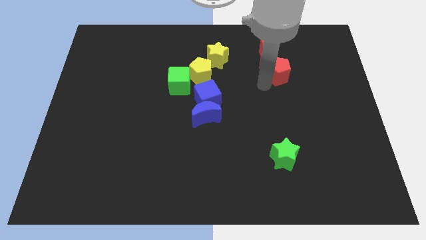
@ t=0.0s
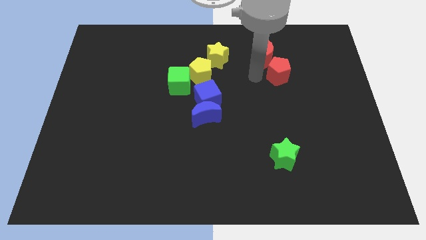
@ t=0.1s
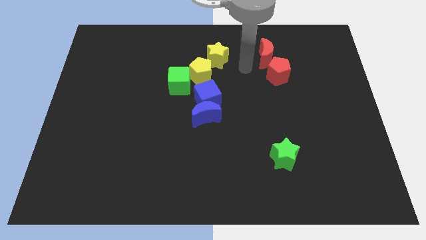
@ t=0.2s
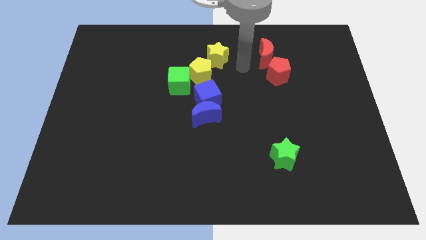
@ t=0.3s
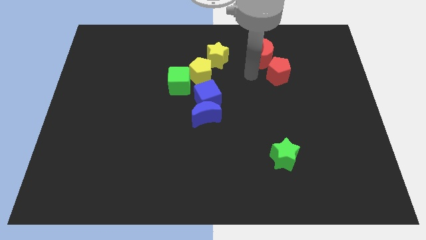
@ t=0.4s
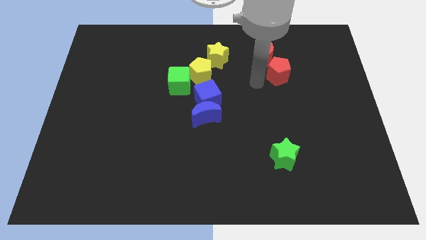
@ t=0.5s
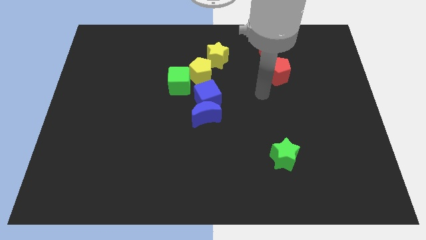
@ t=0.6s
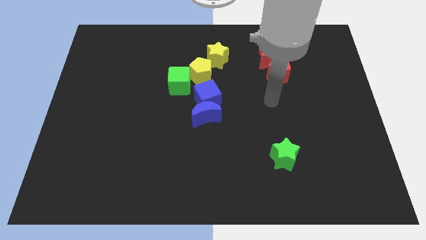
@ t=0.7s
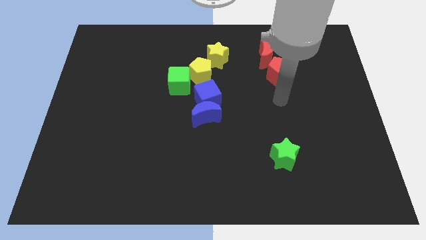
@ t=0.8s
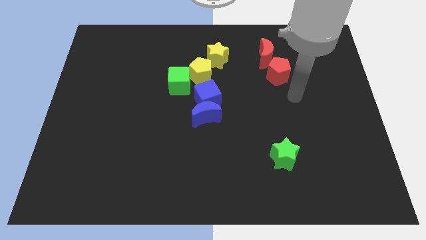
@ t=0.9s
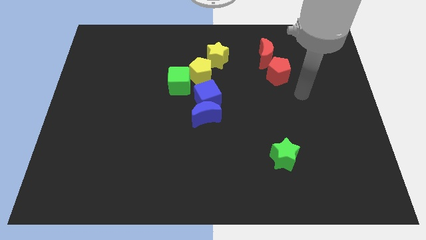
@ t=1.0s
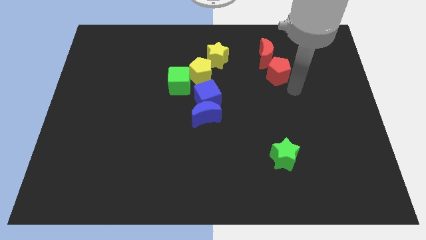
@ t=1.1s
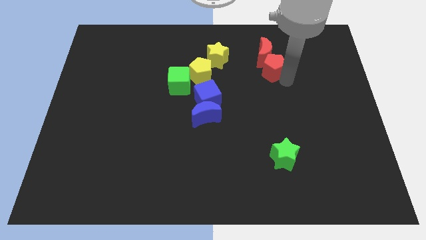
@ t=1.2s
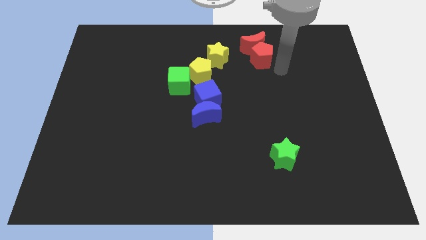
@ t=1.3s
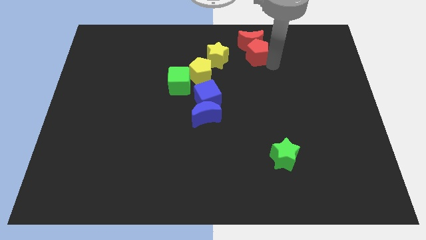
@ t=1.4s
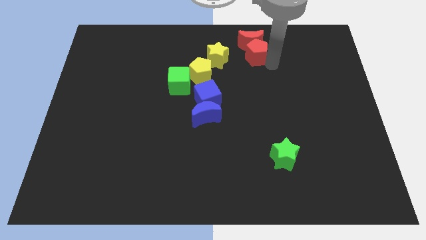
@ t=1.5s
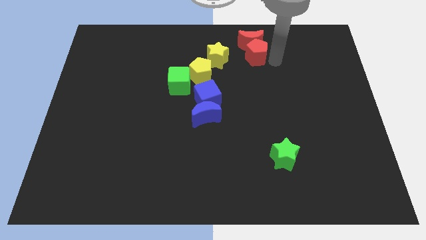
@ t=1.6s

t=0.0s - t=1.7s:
move the red blocks towards the top side

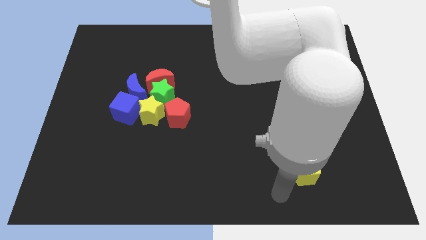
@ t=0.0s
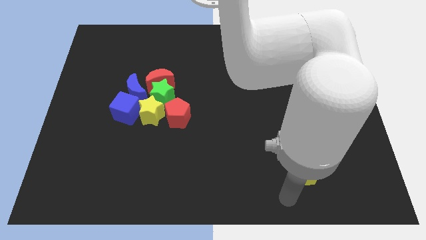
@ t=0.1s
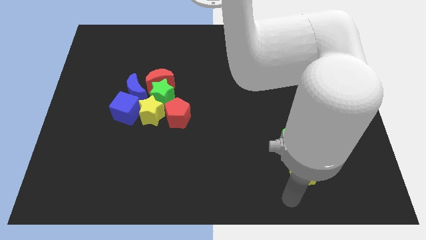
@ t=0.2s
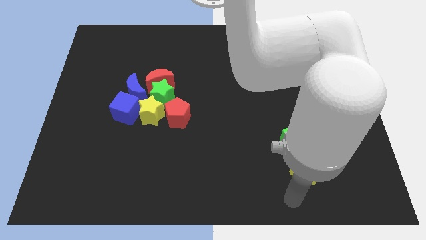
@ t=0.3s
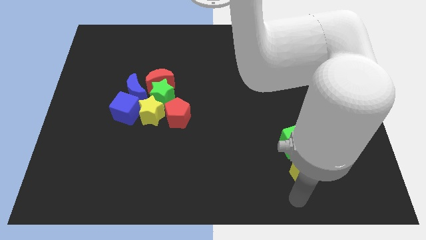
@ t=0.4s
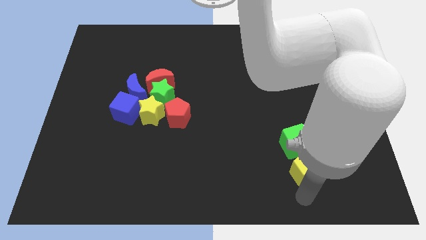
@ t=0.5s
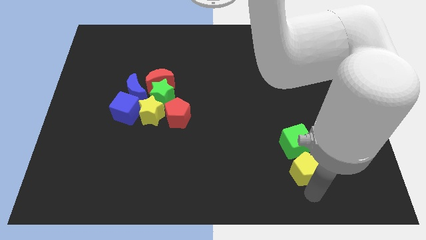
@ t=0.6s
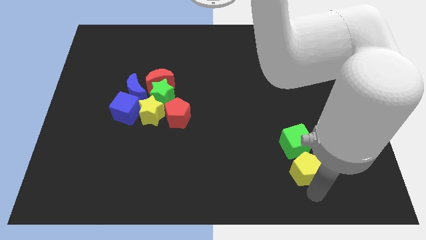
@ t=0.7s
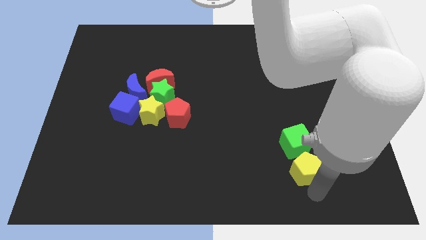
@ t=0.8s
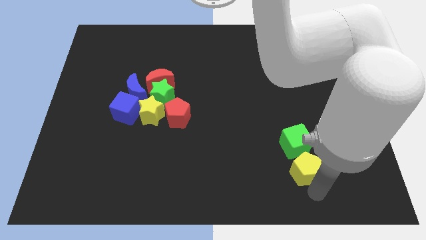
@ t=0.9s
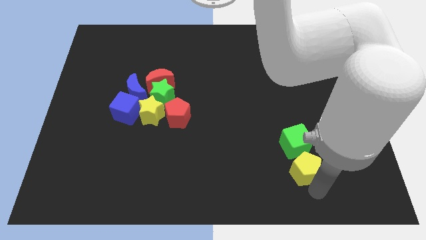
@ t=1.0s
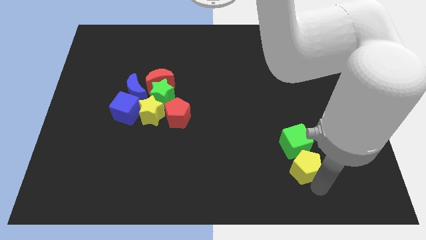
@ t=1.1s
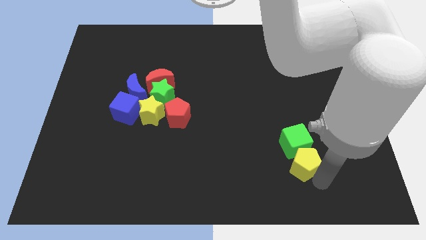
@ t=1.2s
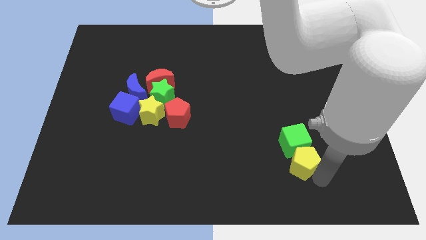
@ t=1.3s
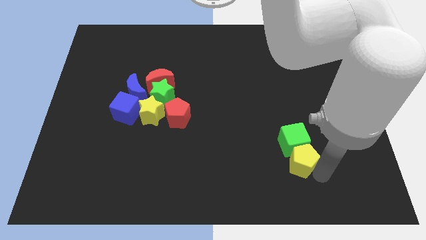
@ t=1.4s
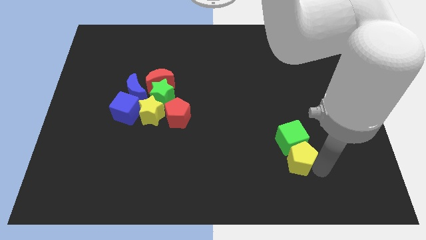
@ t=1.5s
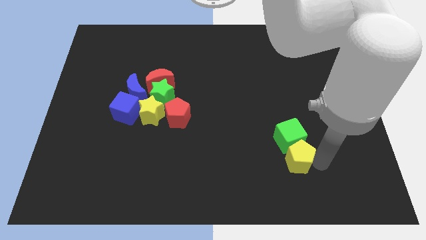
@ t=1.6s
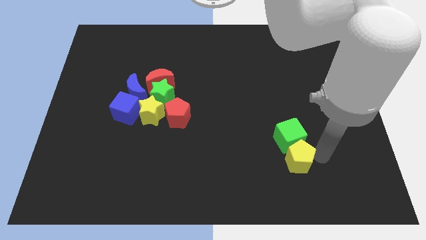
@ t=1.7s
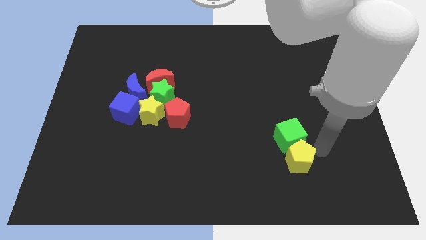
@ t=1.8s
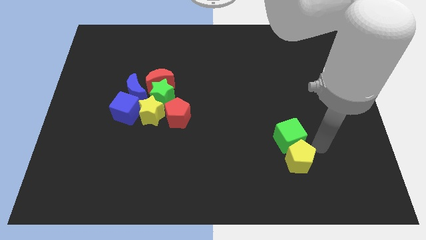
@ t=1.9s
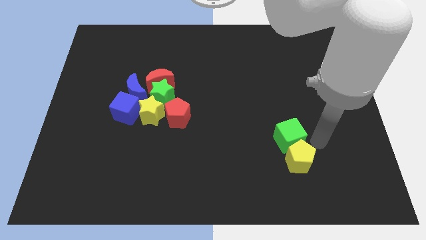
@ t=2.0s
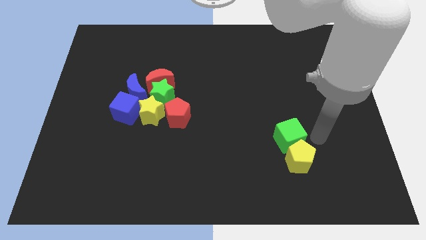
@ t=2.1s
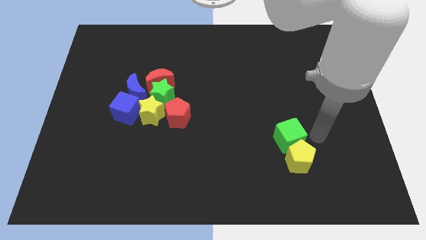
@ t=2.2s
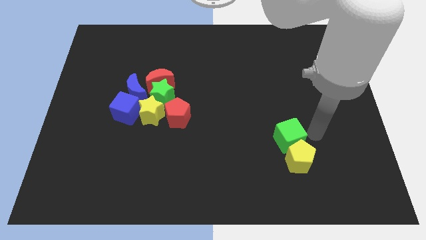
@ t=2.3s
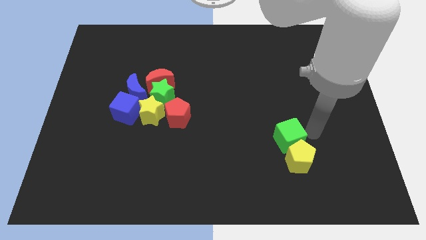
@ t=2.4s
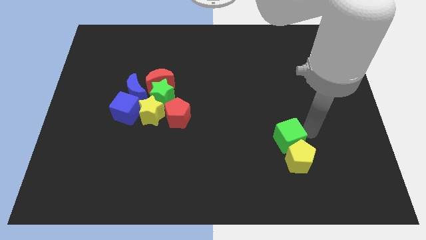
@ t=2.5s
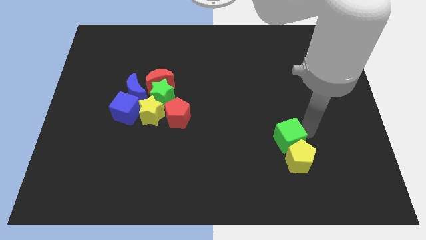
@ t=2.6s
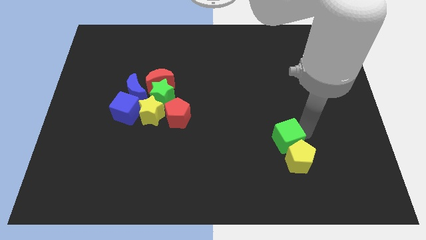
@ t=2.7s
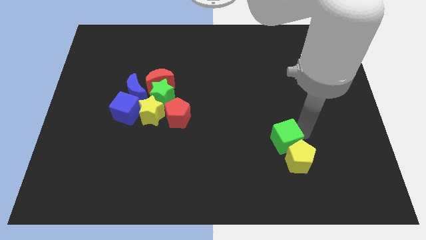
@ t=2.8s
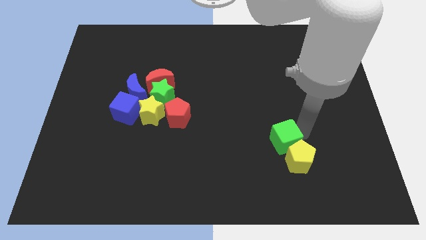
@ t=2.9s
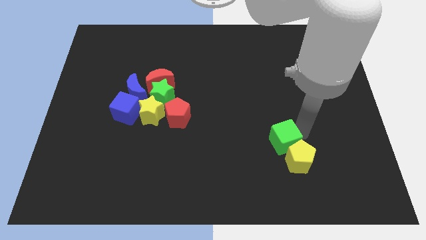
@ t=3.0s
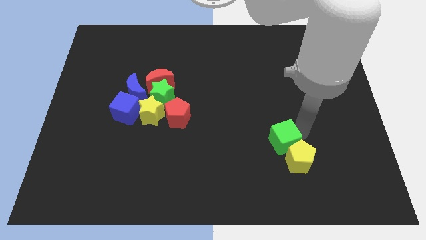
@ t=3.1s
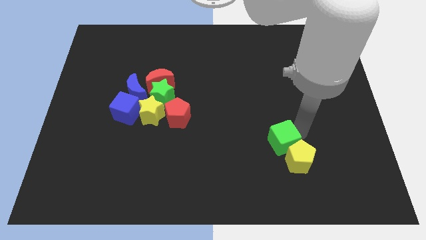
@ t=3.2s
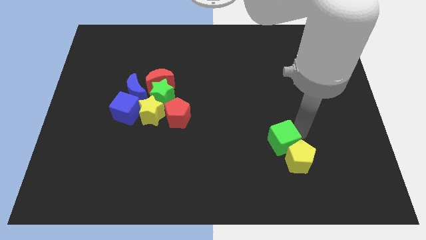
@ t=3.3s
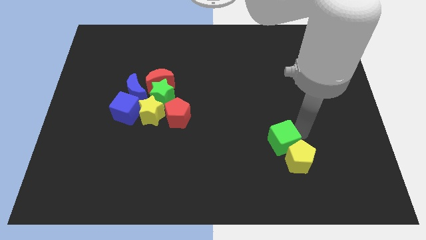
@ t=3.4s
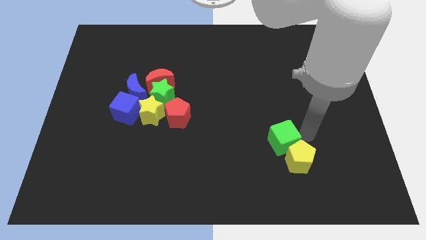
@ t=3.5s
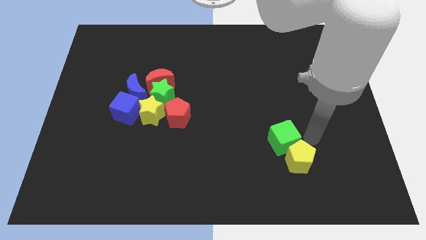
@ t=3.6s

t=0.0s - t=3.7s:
push the yellow pentagon and green cube slightly to the left side of the board

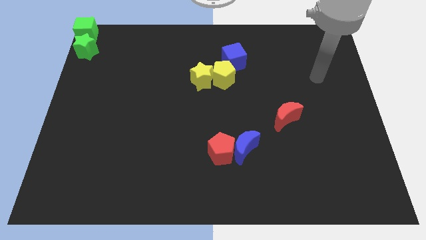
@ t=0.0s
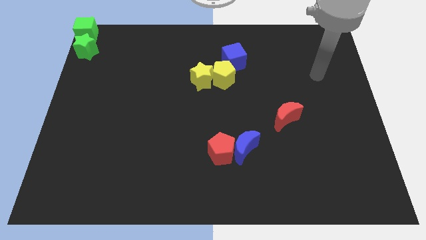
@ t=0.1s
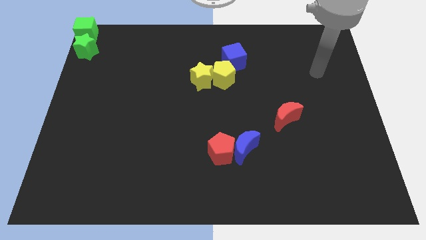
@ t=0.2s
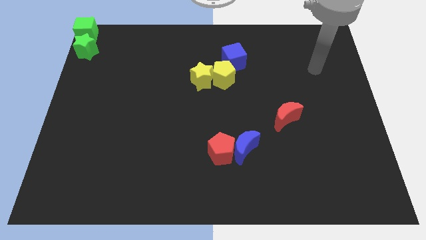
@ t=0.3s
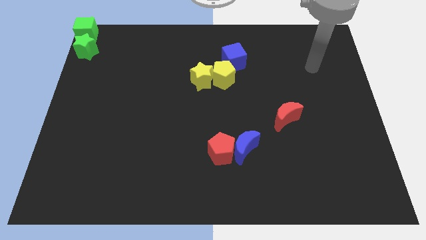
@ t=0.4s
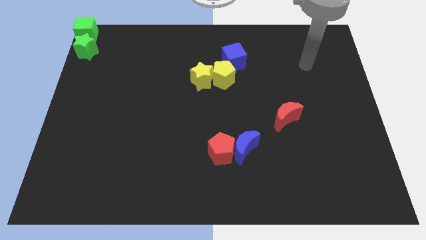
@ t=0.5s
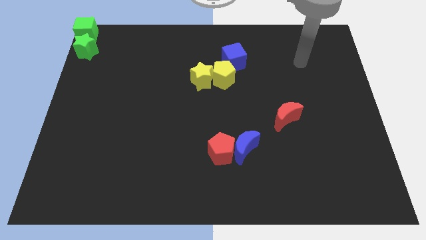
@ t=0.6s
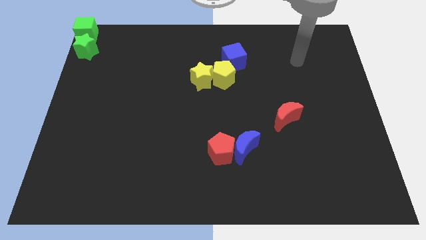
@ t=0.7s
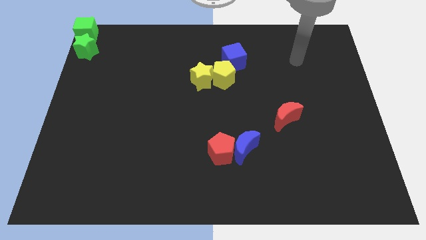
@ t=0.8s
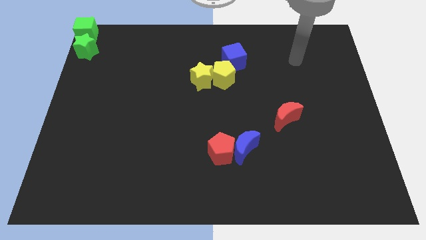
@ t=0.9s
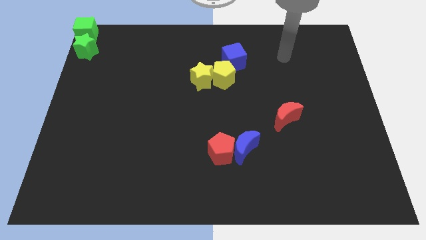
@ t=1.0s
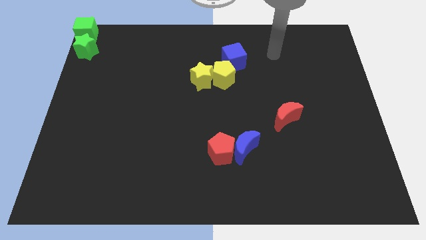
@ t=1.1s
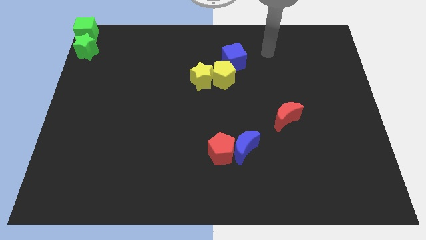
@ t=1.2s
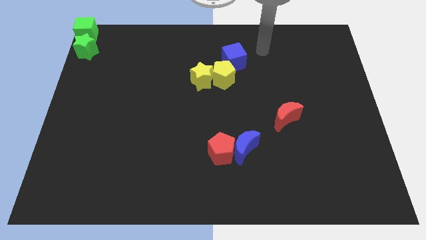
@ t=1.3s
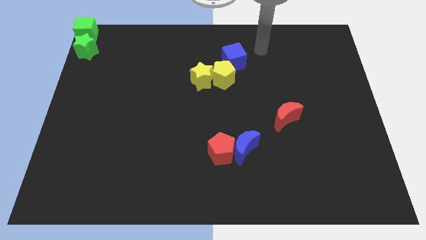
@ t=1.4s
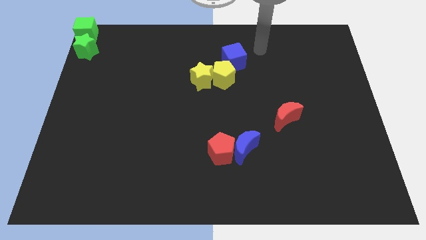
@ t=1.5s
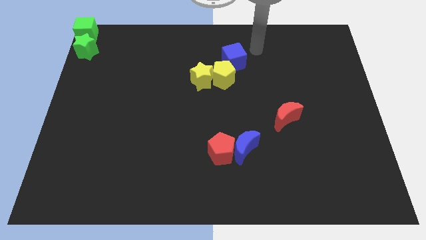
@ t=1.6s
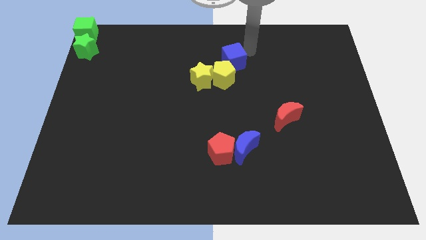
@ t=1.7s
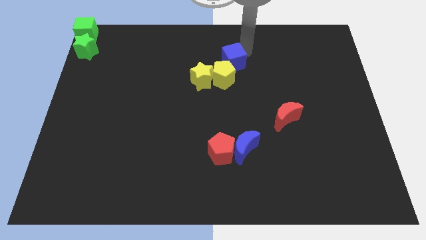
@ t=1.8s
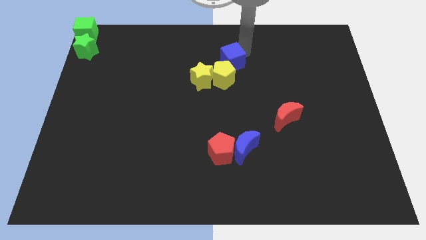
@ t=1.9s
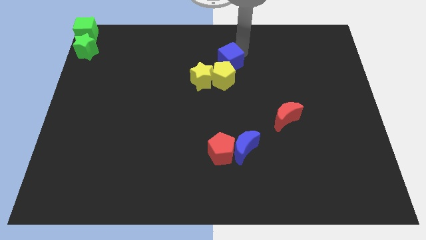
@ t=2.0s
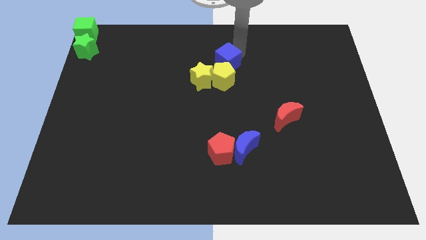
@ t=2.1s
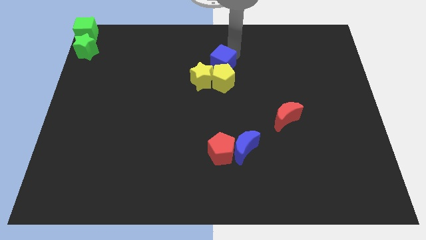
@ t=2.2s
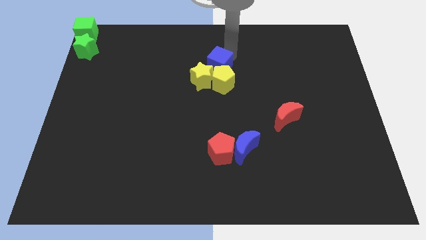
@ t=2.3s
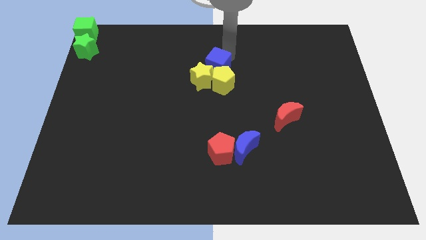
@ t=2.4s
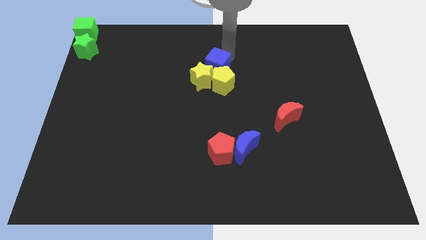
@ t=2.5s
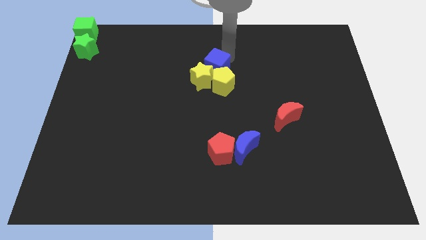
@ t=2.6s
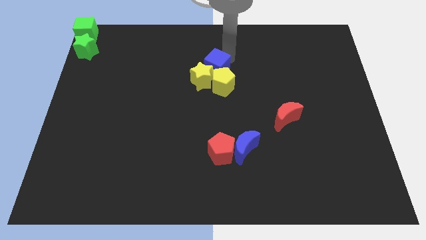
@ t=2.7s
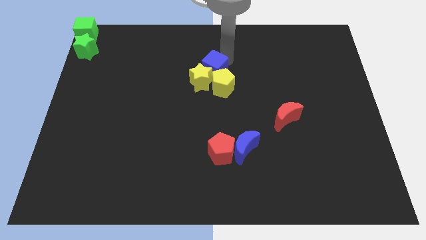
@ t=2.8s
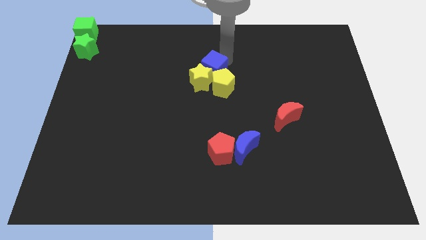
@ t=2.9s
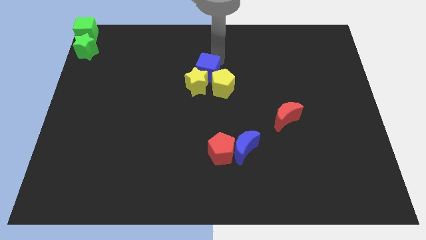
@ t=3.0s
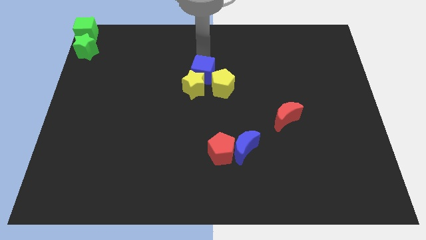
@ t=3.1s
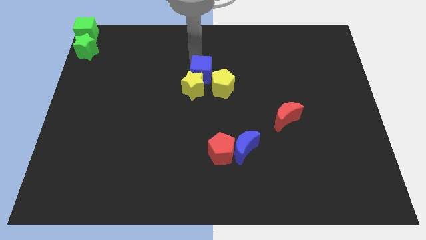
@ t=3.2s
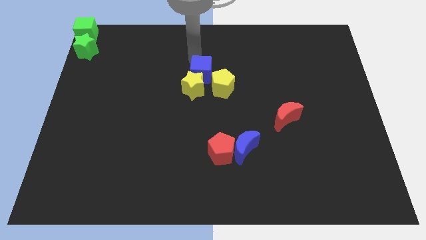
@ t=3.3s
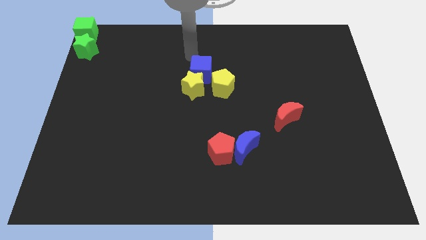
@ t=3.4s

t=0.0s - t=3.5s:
push the blue cube into the top side of the group of yellow blocks

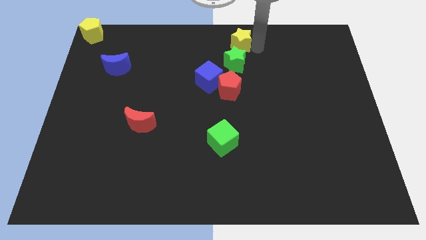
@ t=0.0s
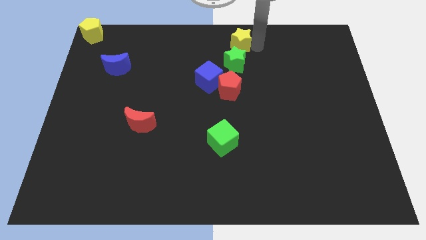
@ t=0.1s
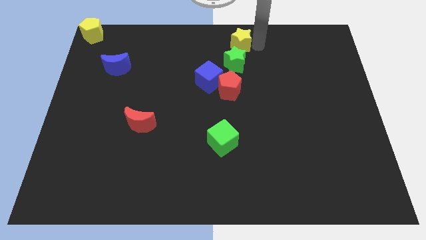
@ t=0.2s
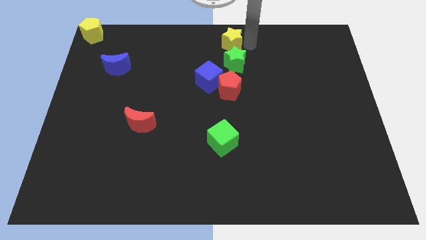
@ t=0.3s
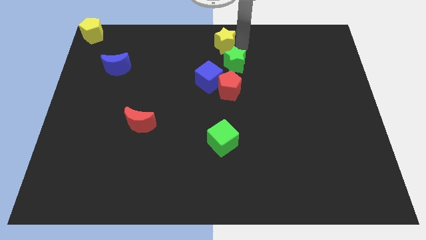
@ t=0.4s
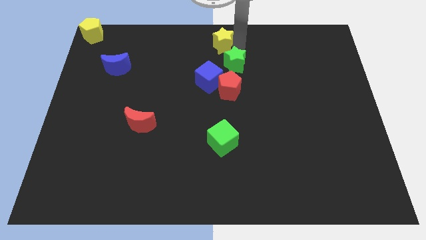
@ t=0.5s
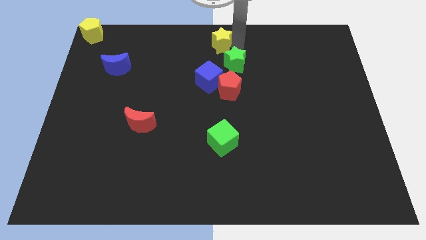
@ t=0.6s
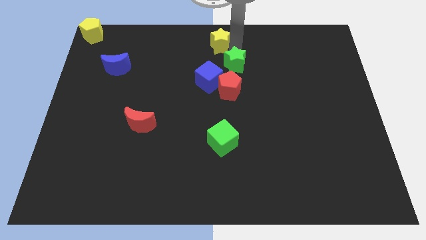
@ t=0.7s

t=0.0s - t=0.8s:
place yellow star at center top
